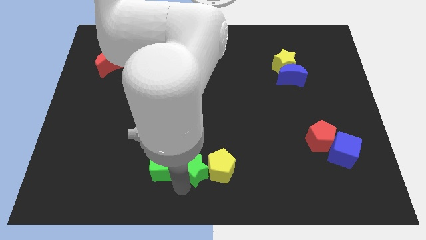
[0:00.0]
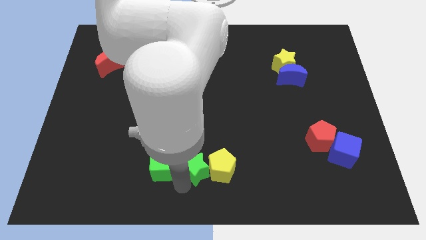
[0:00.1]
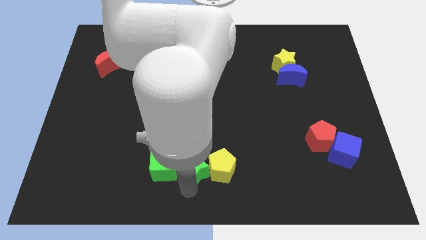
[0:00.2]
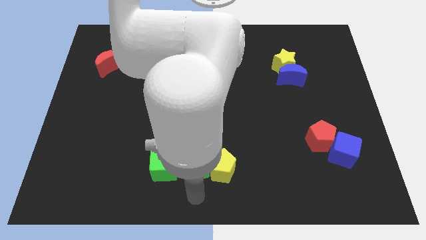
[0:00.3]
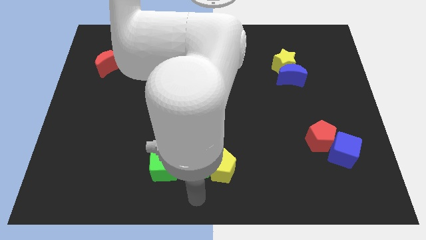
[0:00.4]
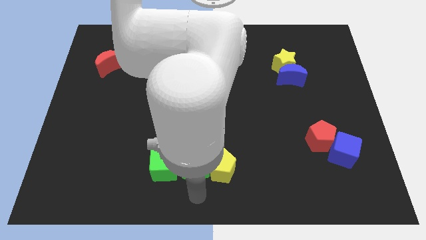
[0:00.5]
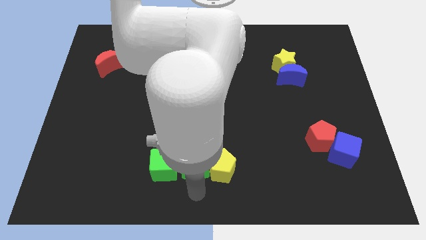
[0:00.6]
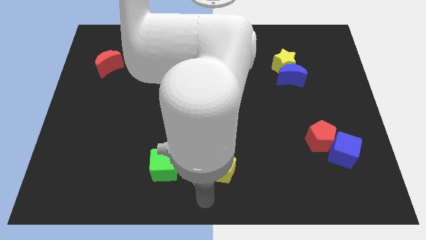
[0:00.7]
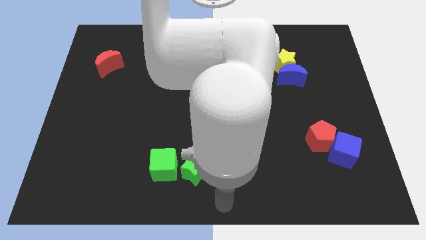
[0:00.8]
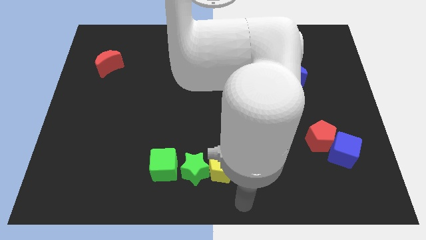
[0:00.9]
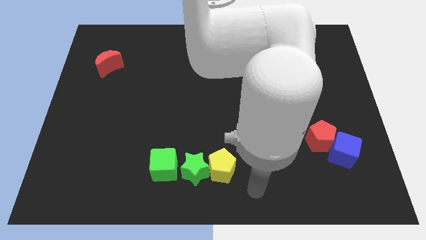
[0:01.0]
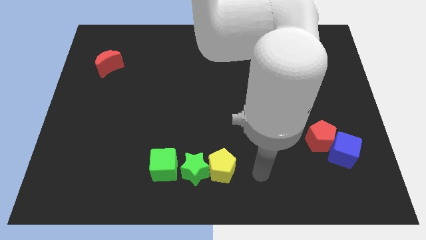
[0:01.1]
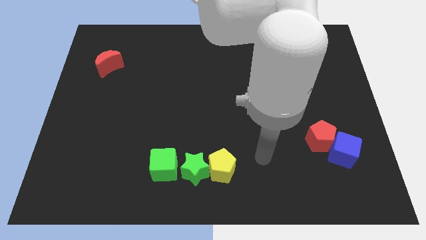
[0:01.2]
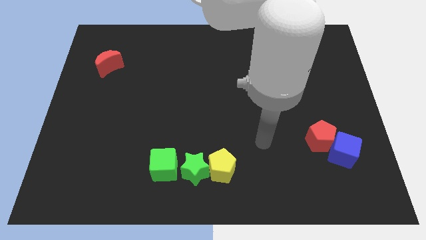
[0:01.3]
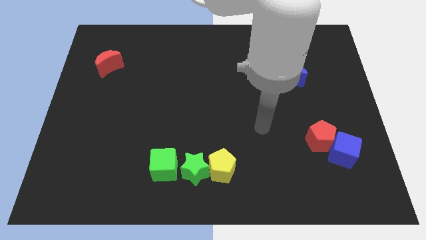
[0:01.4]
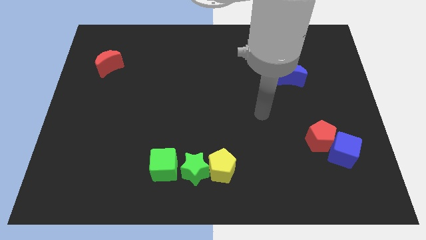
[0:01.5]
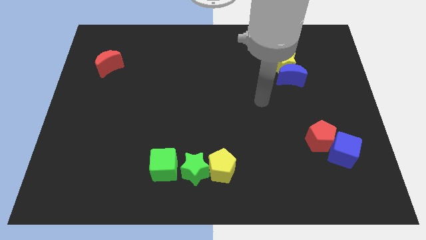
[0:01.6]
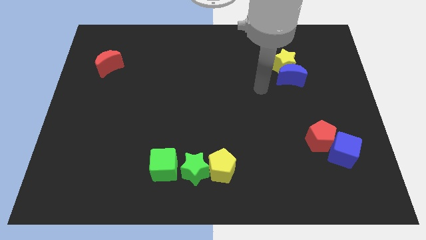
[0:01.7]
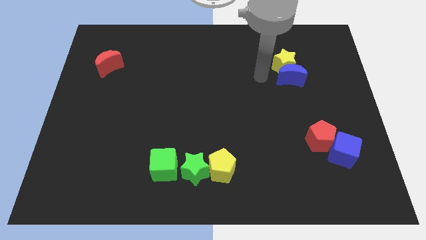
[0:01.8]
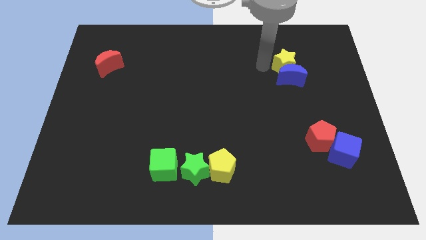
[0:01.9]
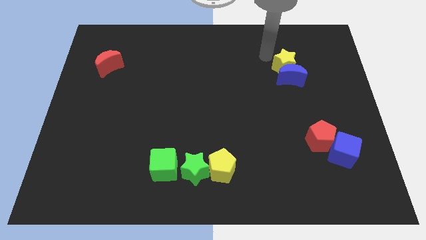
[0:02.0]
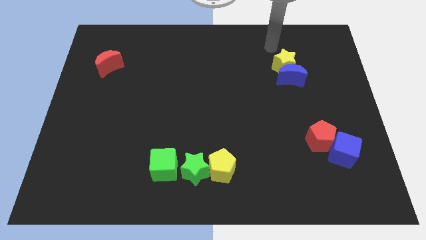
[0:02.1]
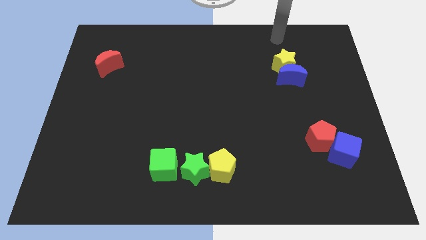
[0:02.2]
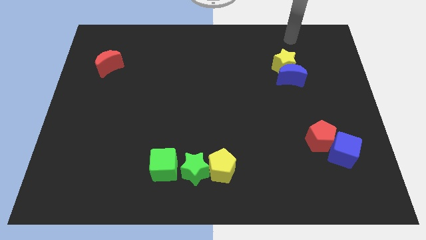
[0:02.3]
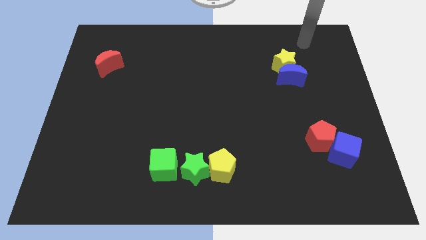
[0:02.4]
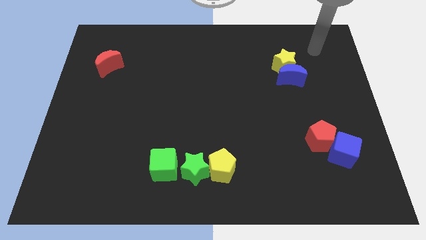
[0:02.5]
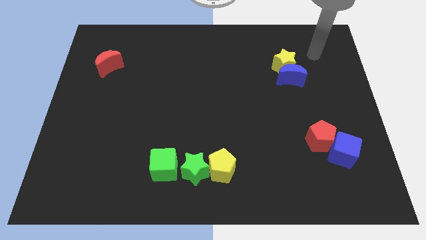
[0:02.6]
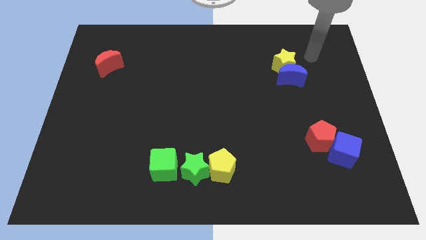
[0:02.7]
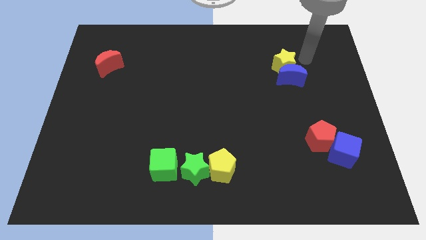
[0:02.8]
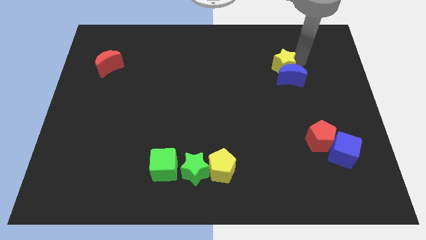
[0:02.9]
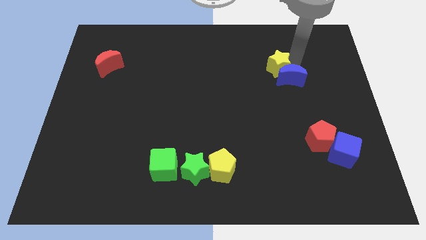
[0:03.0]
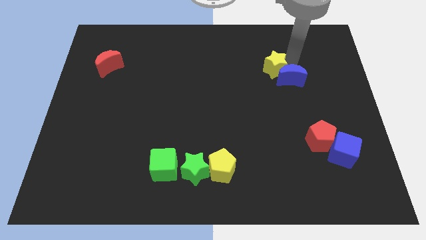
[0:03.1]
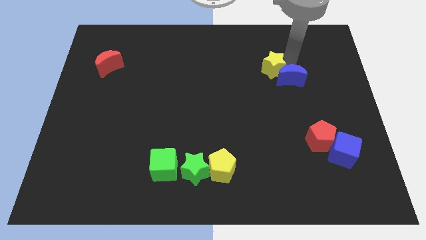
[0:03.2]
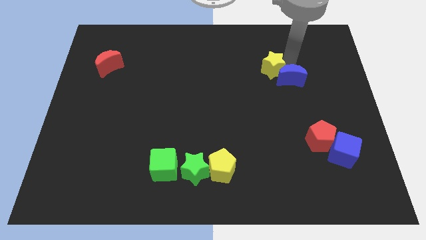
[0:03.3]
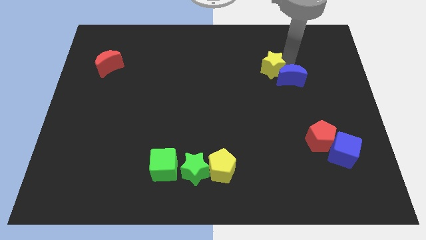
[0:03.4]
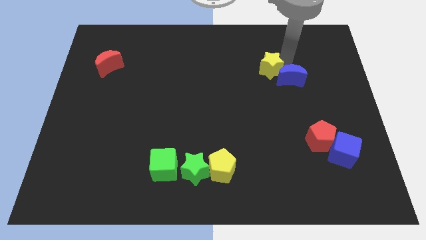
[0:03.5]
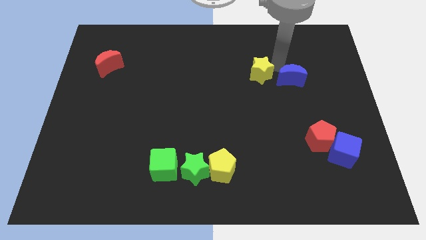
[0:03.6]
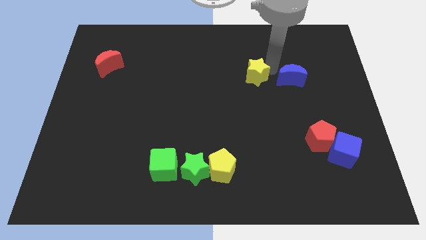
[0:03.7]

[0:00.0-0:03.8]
put the yellow star parallel left to the blue moon

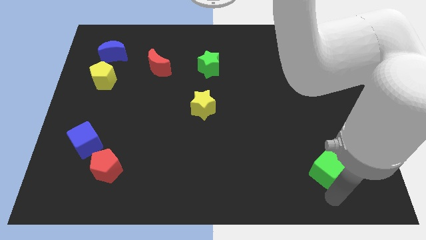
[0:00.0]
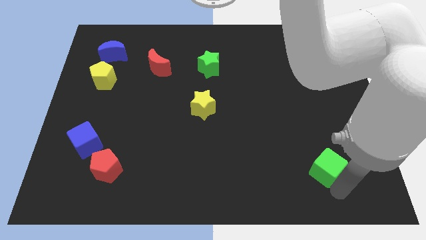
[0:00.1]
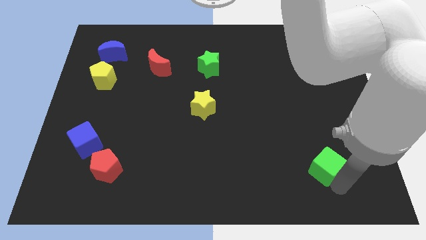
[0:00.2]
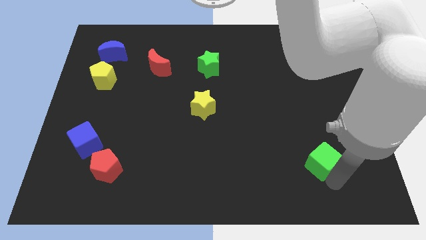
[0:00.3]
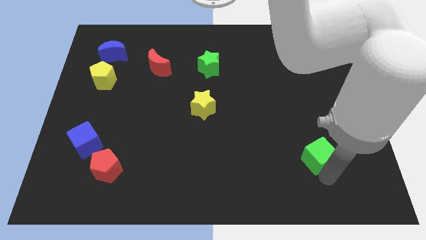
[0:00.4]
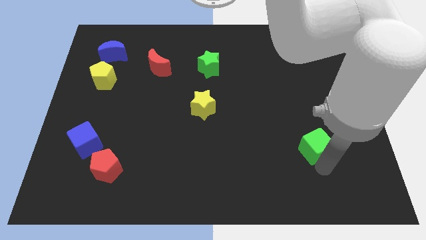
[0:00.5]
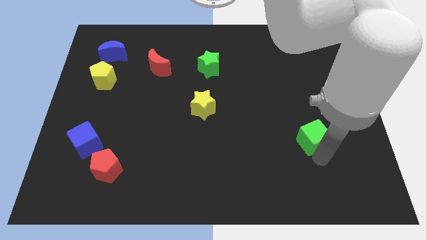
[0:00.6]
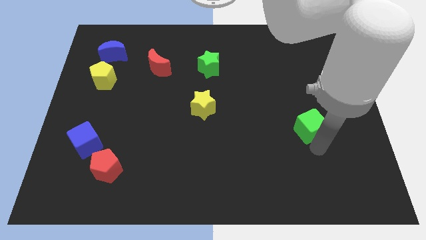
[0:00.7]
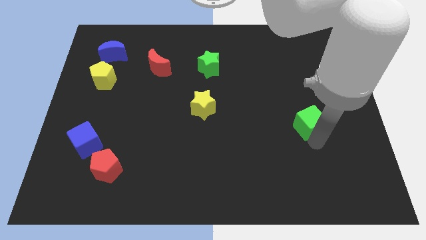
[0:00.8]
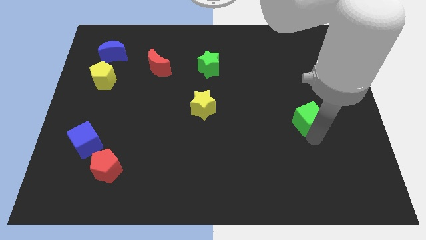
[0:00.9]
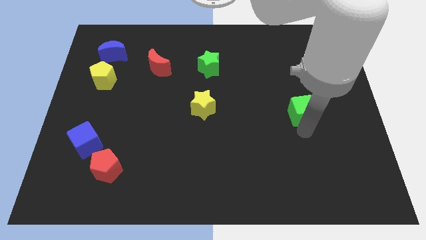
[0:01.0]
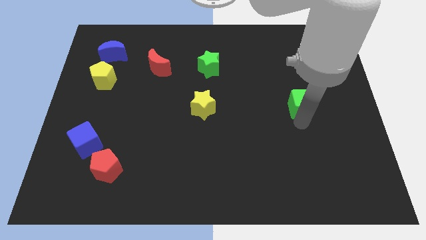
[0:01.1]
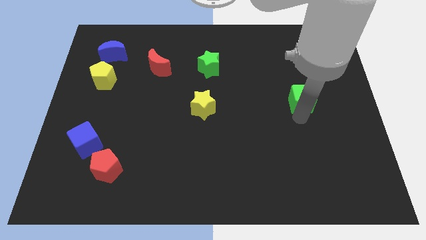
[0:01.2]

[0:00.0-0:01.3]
push the green cube upwards to the horizontal right of the yellow star

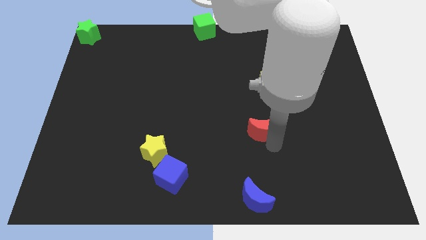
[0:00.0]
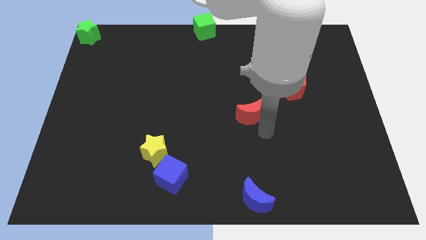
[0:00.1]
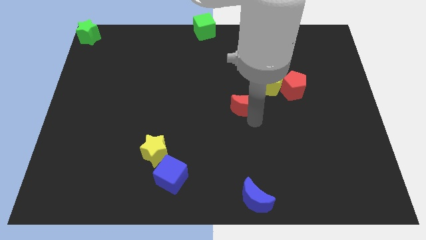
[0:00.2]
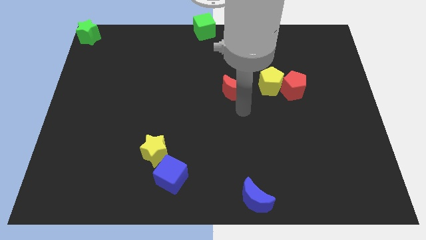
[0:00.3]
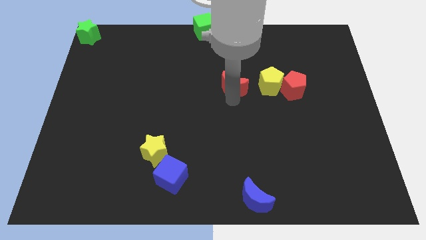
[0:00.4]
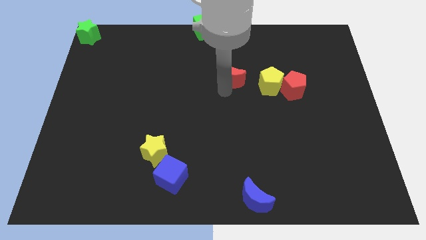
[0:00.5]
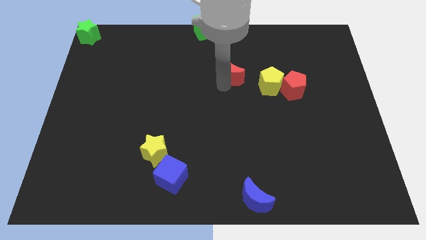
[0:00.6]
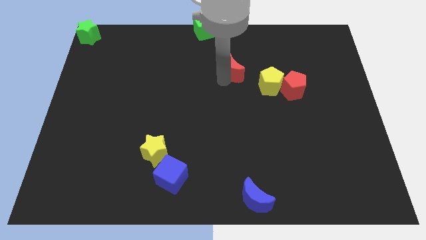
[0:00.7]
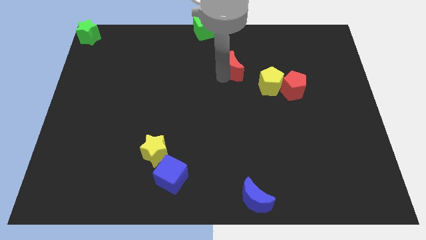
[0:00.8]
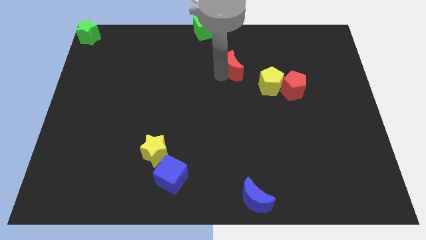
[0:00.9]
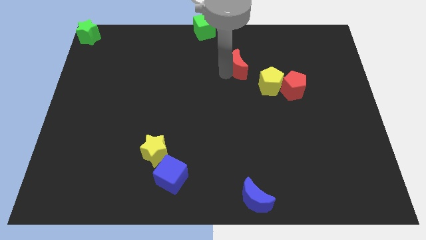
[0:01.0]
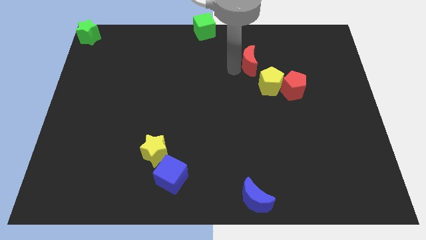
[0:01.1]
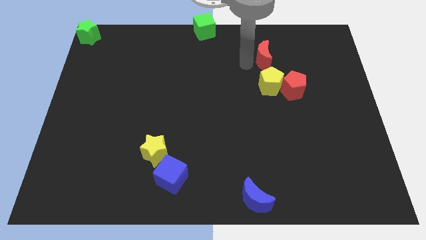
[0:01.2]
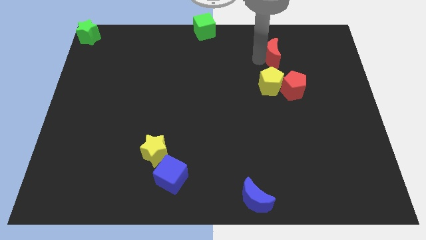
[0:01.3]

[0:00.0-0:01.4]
move the red moon to the top side of the yellow pentagon

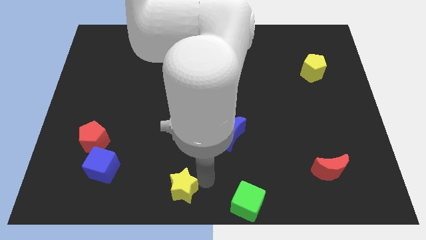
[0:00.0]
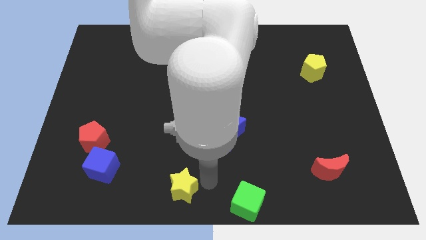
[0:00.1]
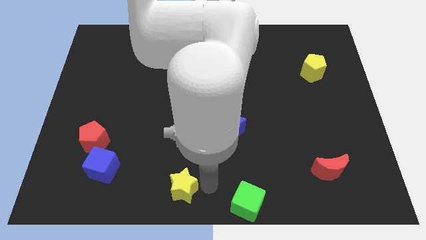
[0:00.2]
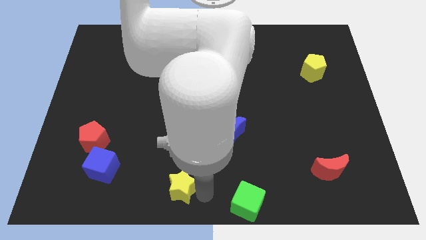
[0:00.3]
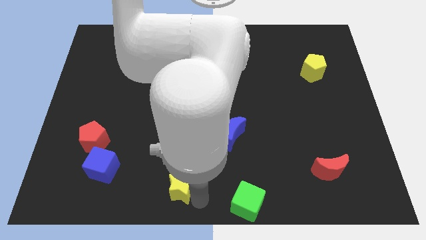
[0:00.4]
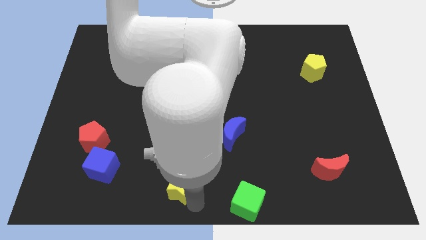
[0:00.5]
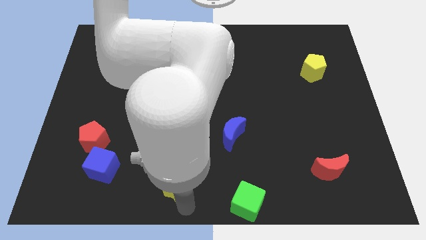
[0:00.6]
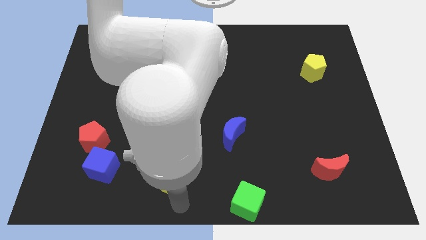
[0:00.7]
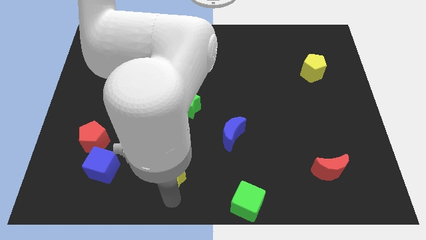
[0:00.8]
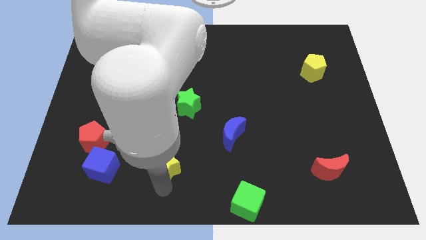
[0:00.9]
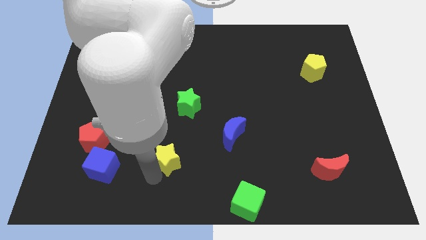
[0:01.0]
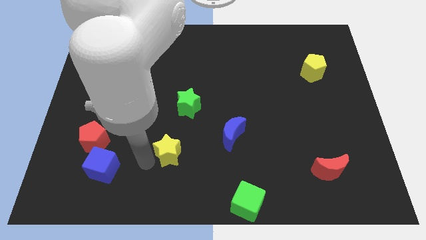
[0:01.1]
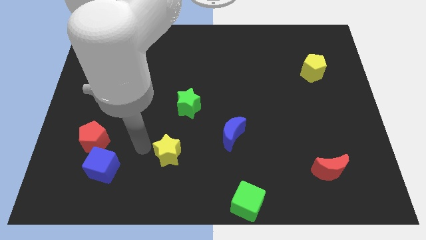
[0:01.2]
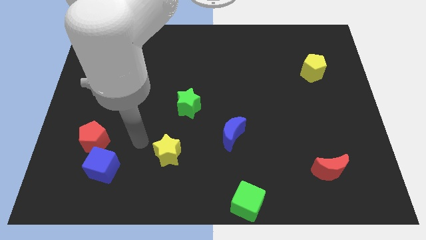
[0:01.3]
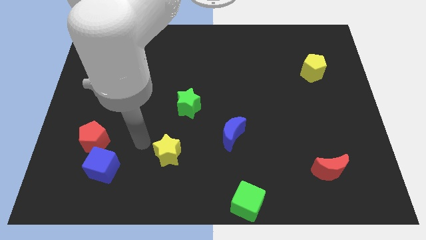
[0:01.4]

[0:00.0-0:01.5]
move yellow star to the right of red pentagon

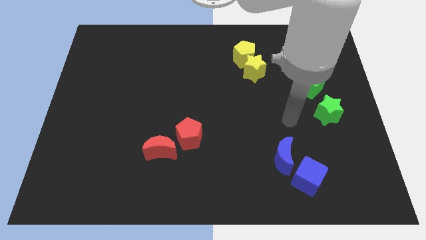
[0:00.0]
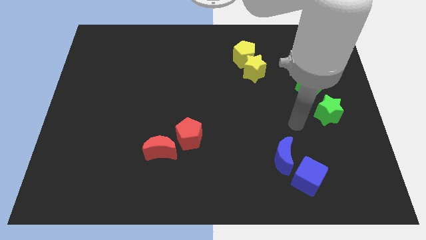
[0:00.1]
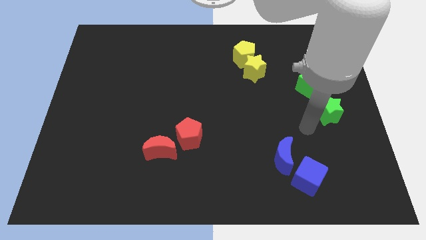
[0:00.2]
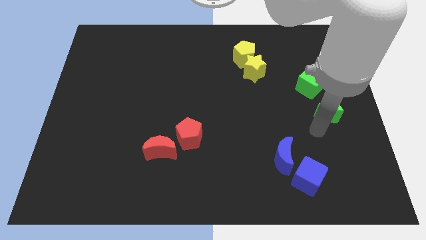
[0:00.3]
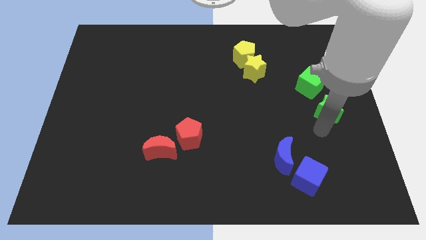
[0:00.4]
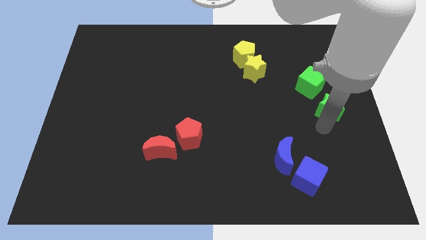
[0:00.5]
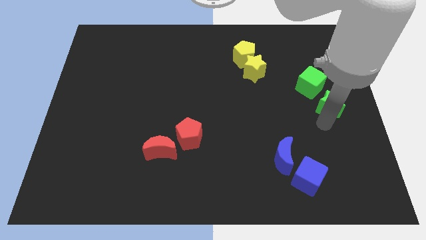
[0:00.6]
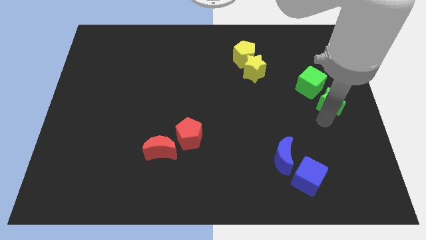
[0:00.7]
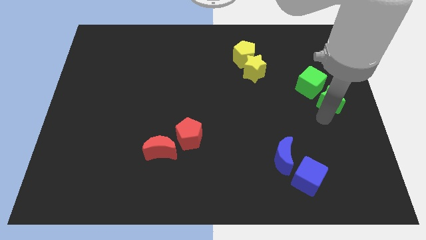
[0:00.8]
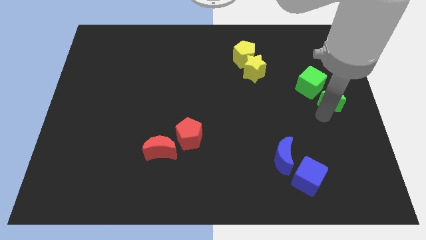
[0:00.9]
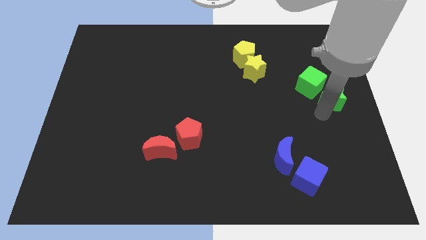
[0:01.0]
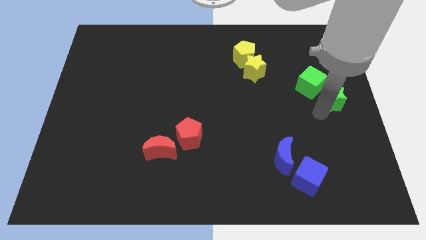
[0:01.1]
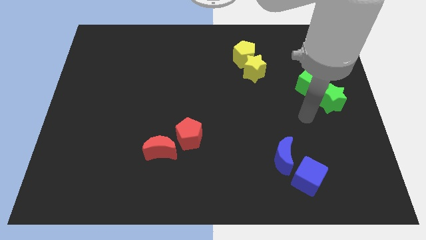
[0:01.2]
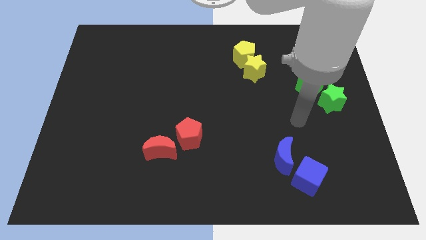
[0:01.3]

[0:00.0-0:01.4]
move the green star right towards the green cube
